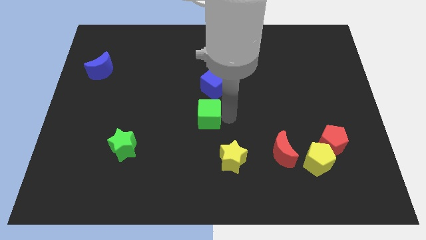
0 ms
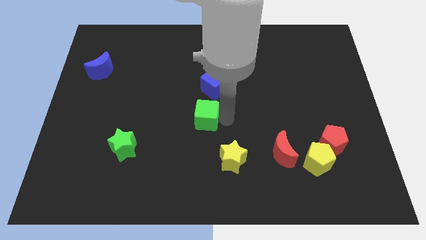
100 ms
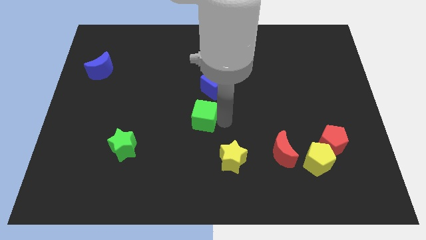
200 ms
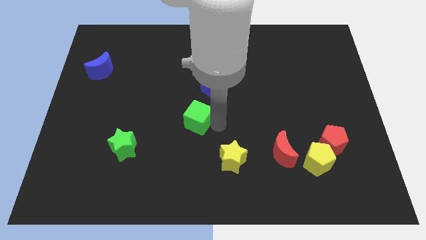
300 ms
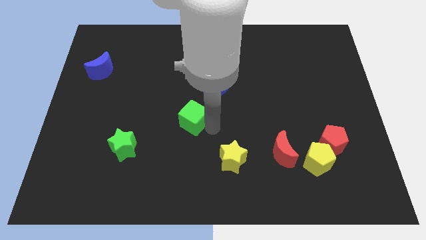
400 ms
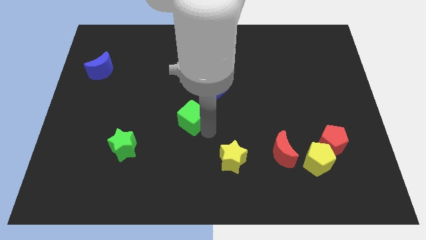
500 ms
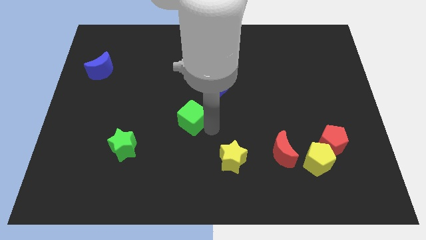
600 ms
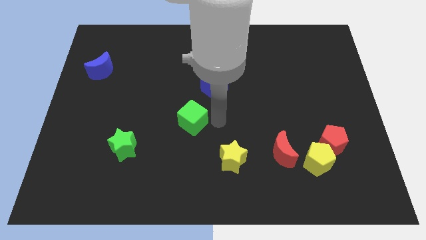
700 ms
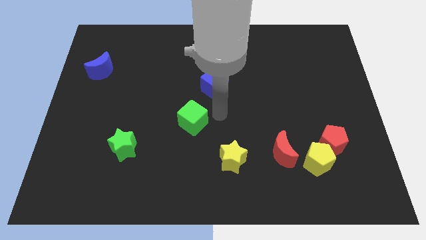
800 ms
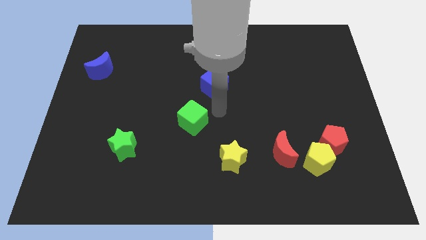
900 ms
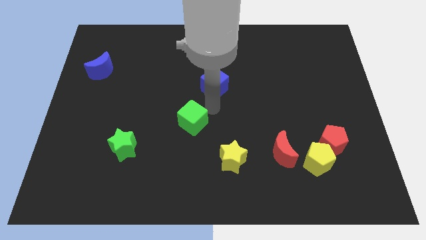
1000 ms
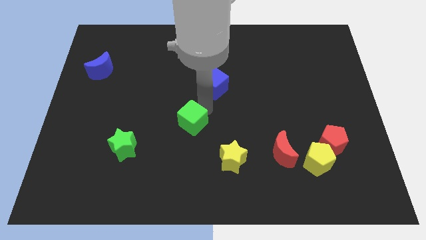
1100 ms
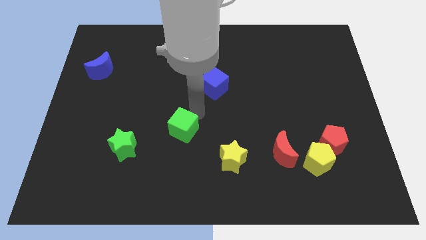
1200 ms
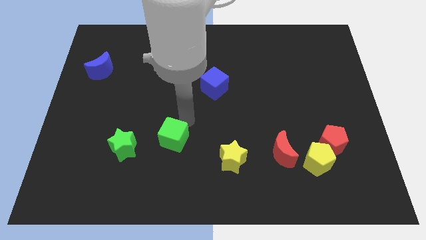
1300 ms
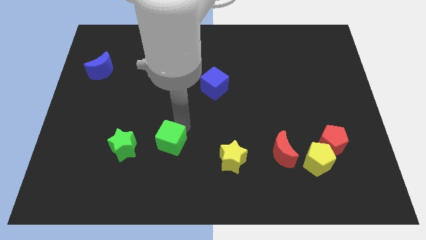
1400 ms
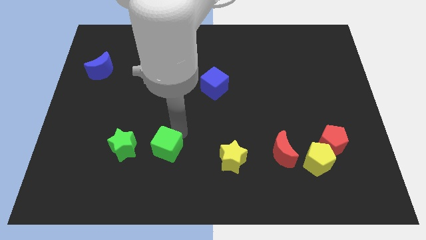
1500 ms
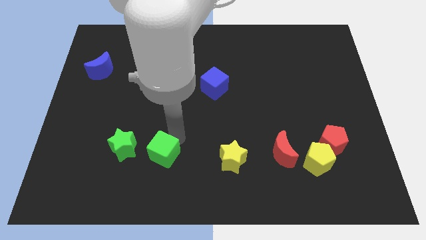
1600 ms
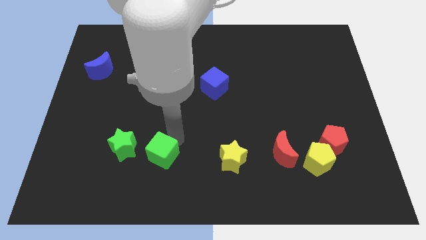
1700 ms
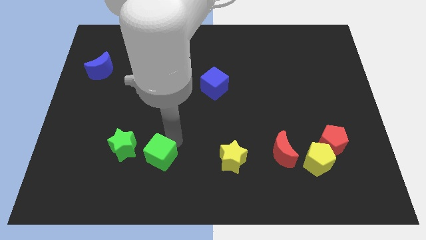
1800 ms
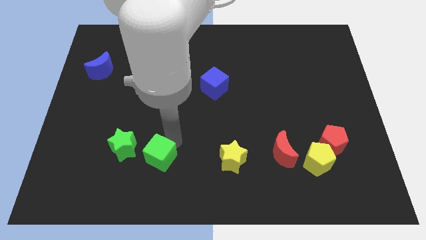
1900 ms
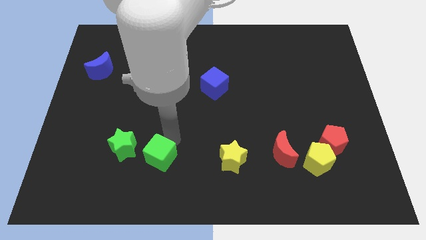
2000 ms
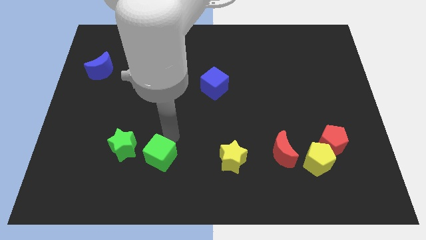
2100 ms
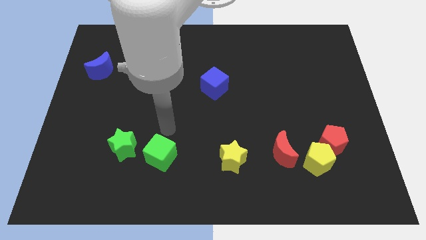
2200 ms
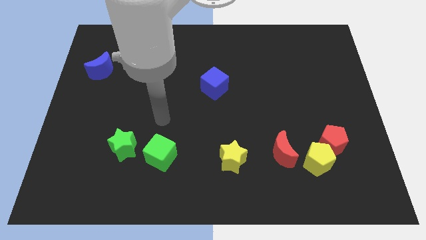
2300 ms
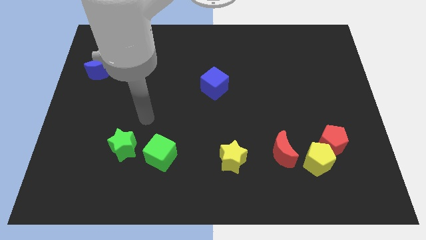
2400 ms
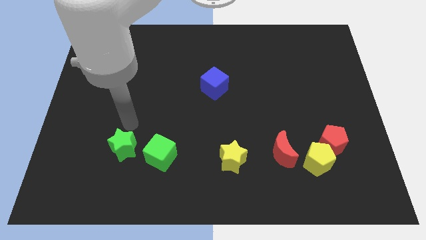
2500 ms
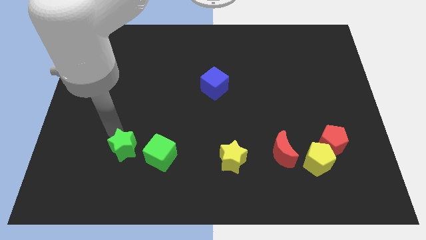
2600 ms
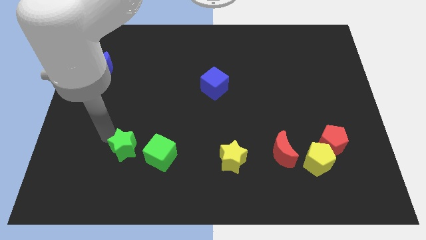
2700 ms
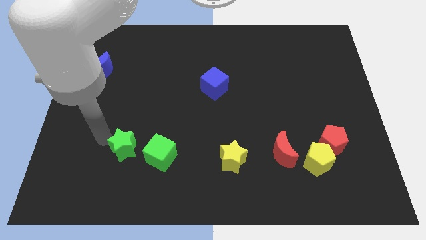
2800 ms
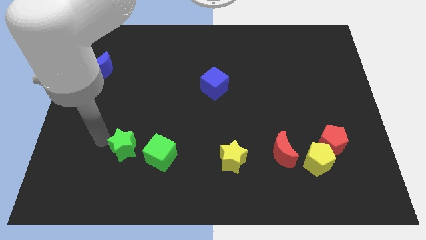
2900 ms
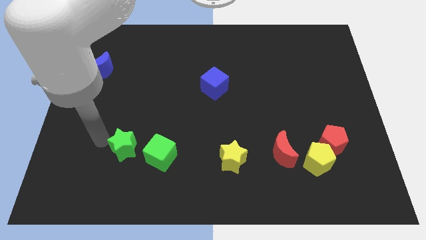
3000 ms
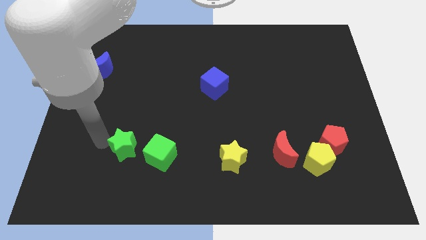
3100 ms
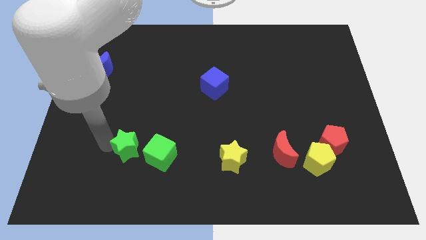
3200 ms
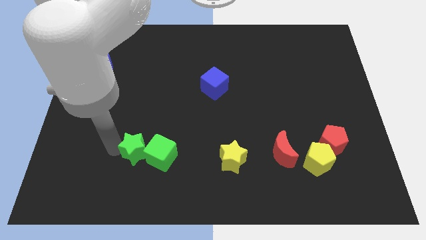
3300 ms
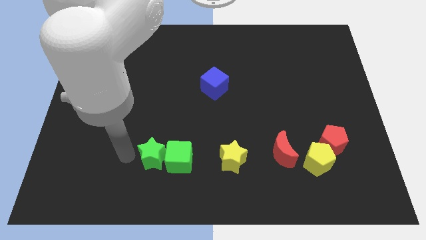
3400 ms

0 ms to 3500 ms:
put the green cube and green star together

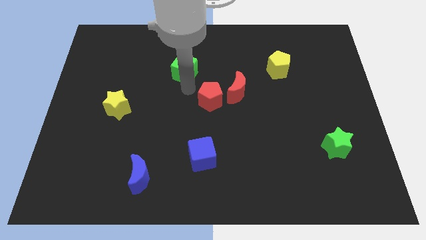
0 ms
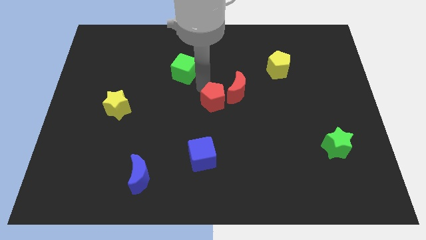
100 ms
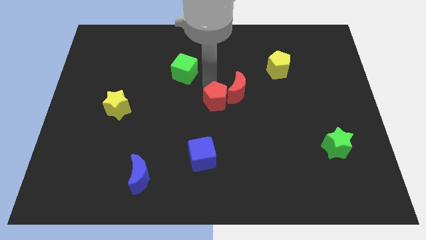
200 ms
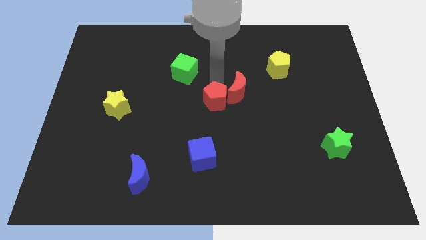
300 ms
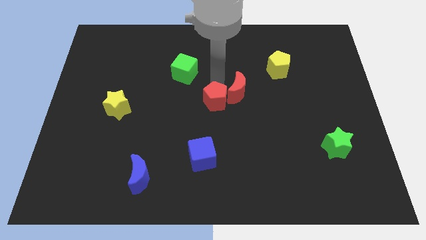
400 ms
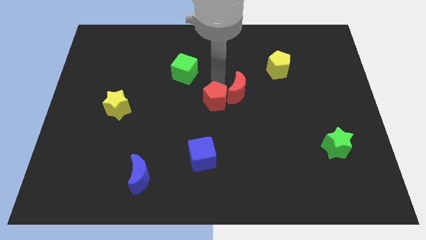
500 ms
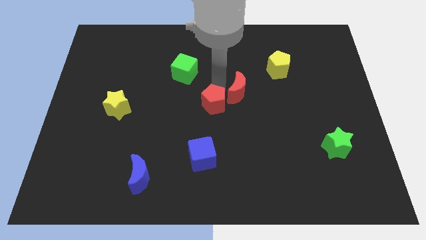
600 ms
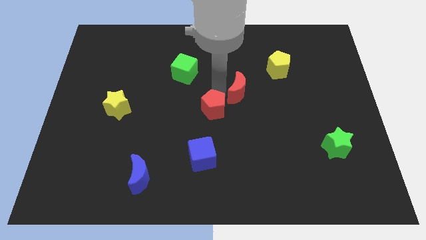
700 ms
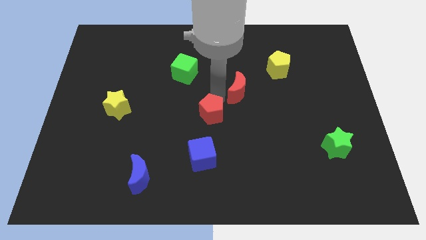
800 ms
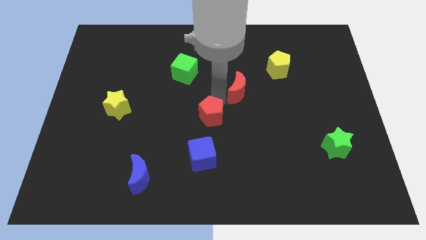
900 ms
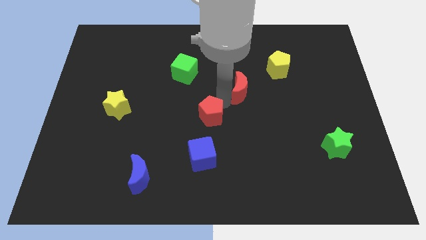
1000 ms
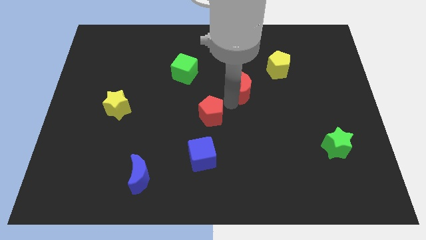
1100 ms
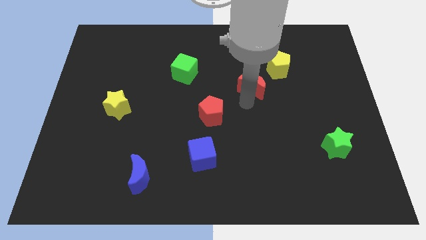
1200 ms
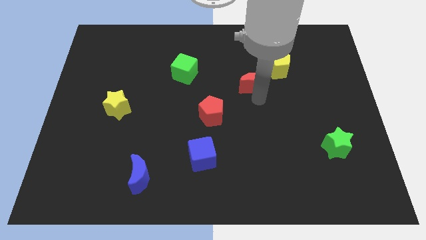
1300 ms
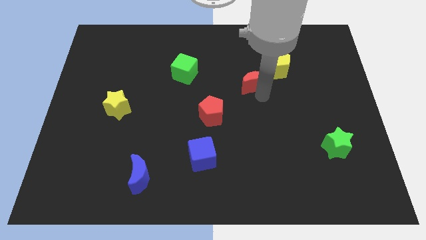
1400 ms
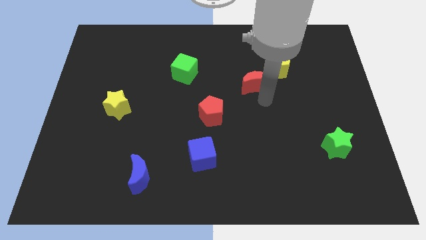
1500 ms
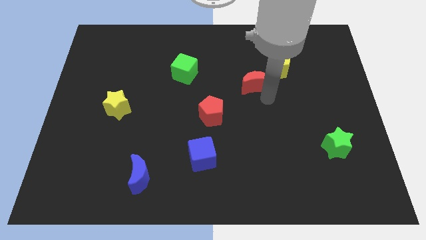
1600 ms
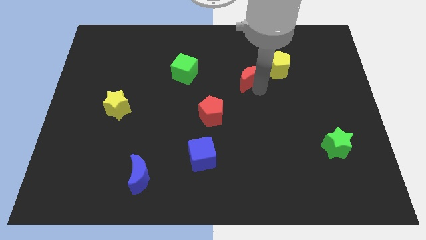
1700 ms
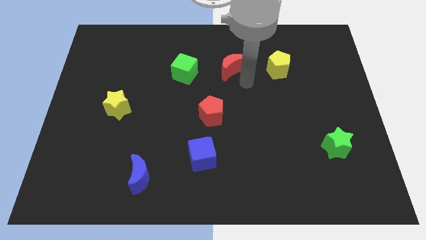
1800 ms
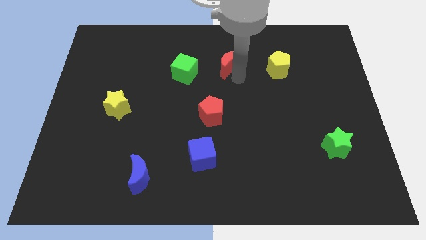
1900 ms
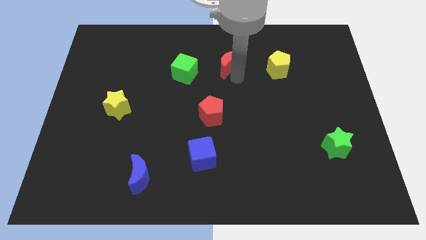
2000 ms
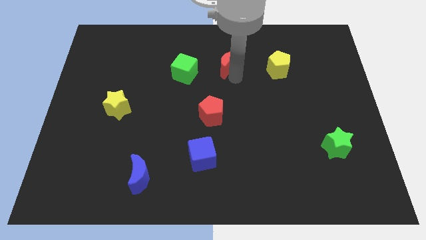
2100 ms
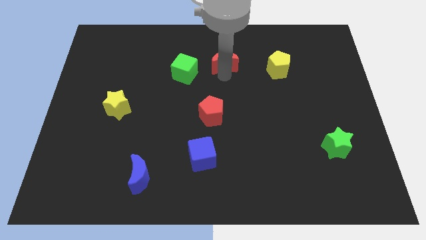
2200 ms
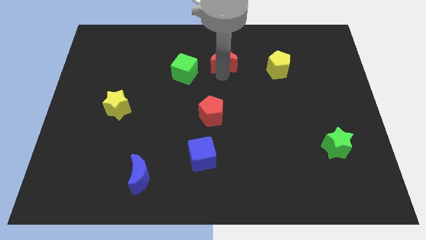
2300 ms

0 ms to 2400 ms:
separate the red blocks of the board

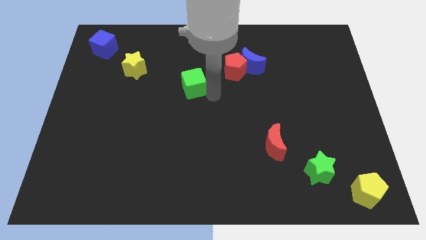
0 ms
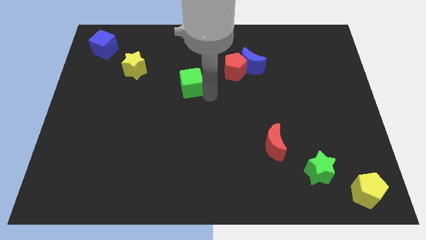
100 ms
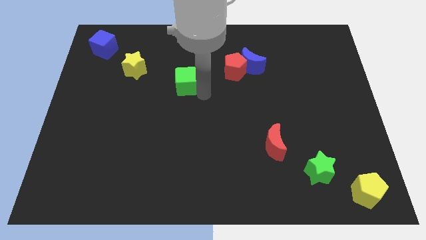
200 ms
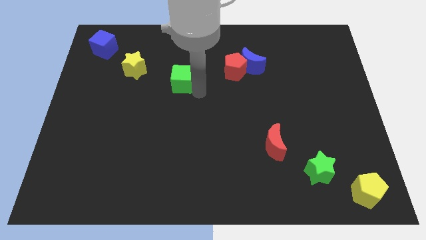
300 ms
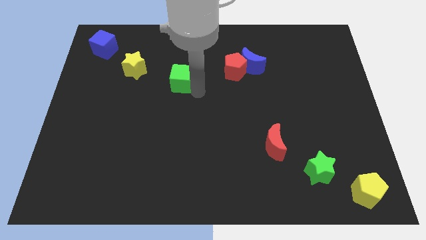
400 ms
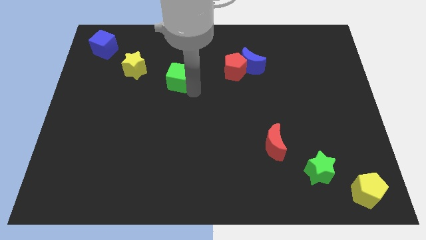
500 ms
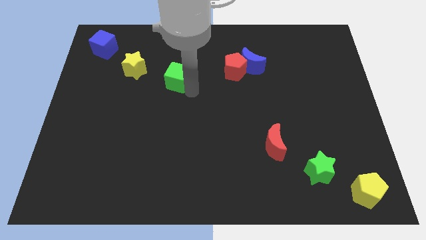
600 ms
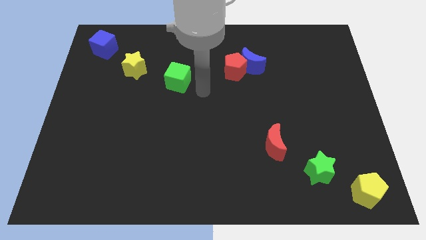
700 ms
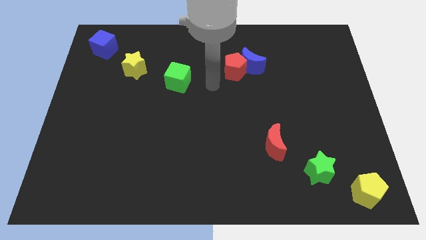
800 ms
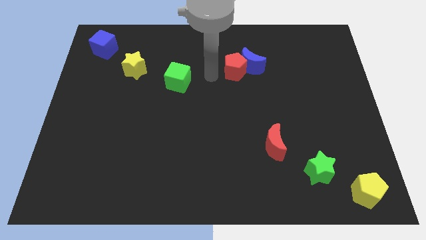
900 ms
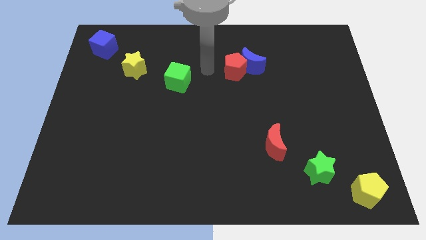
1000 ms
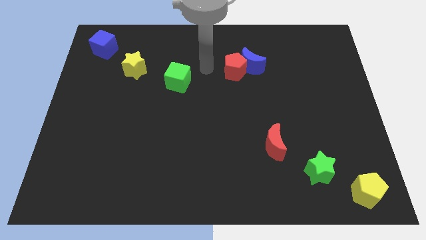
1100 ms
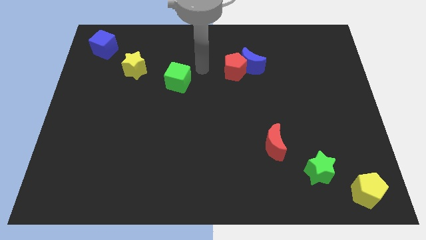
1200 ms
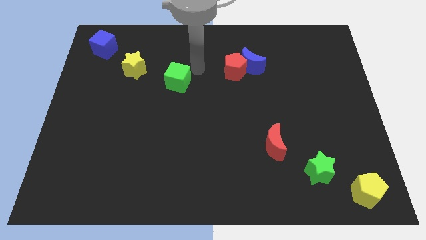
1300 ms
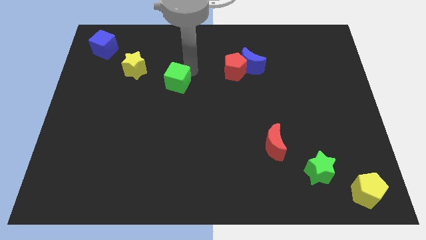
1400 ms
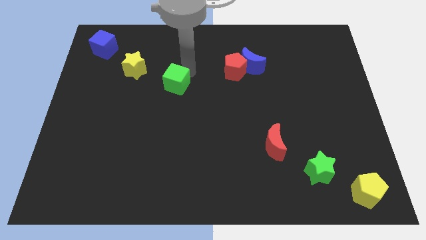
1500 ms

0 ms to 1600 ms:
move the green cube to the right of the yellow star

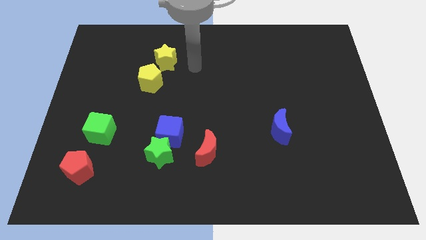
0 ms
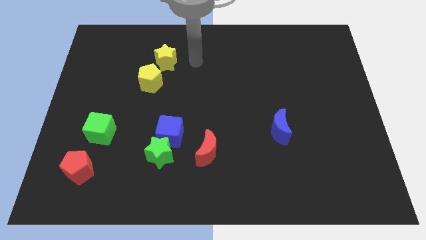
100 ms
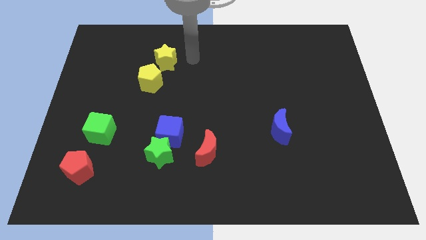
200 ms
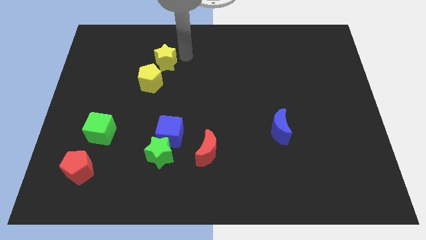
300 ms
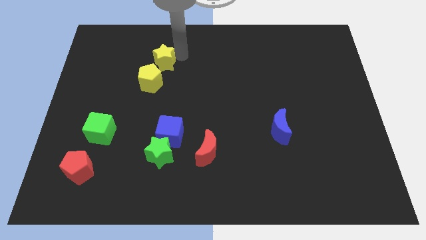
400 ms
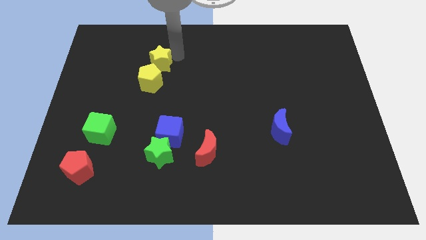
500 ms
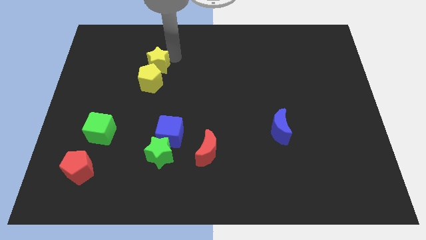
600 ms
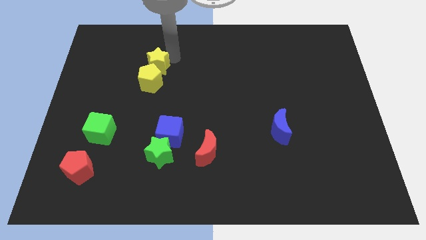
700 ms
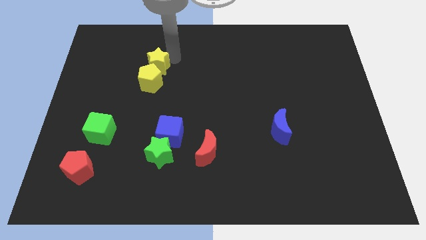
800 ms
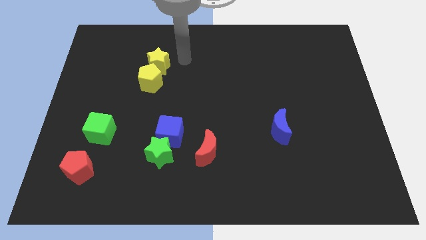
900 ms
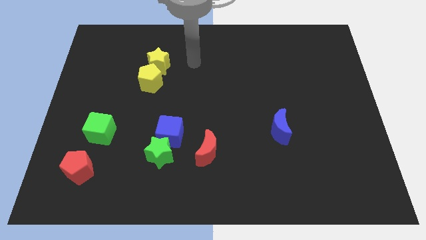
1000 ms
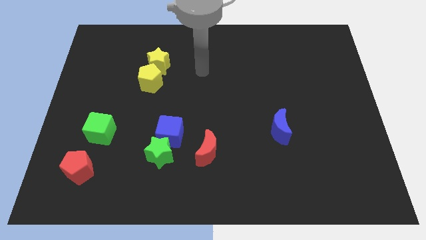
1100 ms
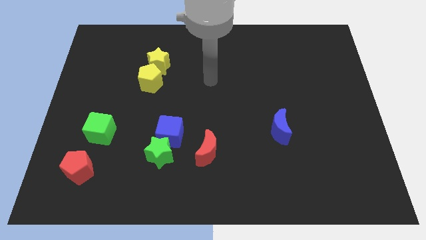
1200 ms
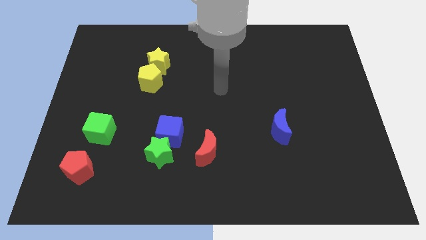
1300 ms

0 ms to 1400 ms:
slide the yellow star above the yellow pentagon

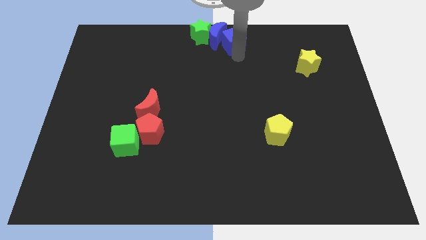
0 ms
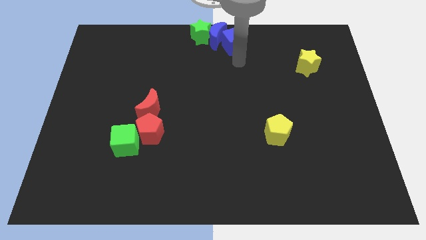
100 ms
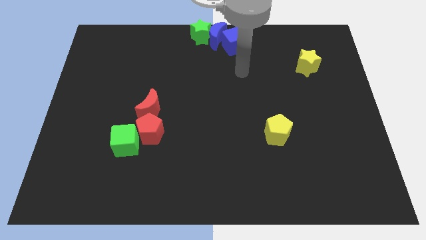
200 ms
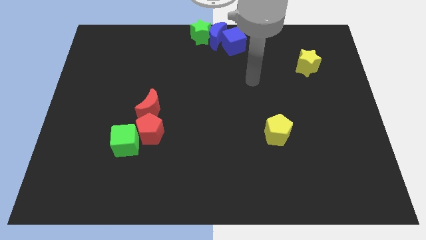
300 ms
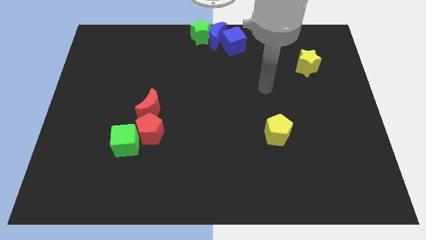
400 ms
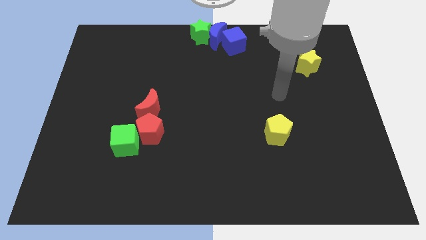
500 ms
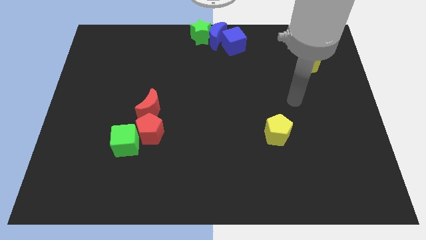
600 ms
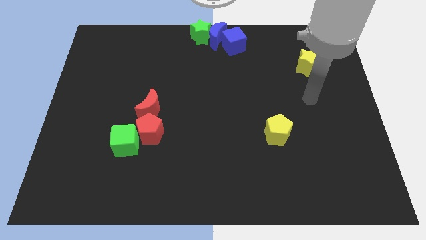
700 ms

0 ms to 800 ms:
move away from the blue cube
